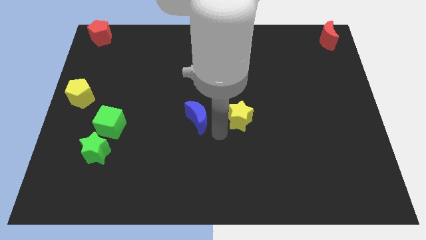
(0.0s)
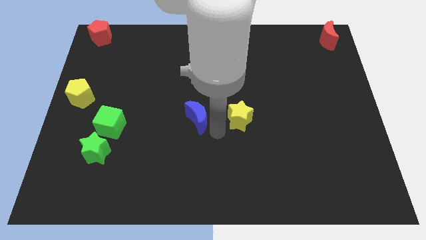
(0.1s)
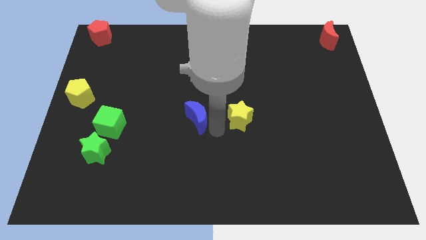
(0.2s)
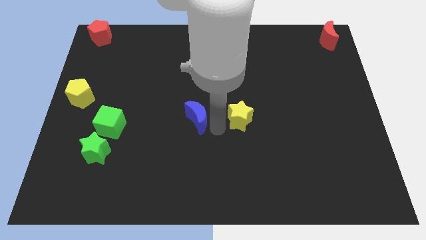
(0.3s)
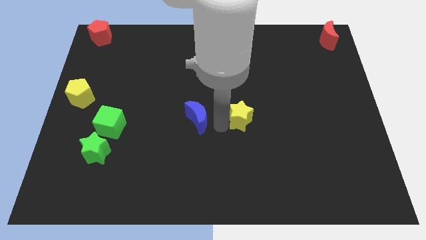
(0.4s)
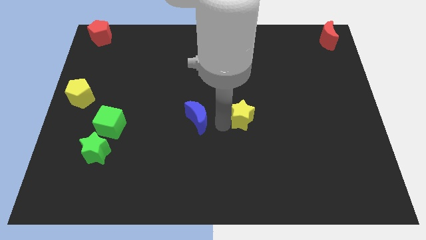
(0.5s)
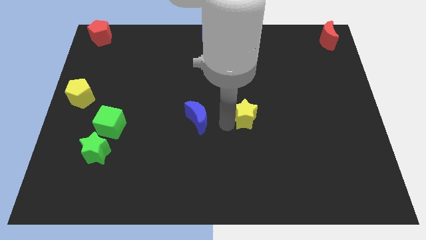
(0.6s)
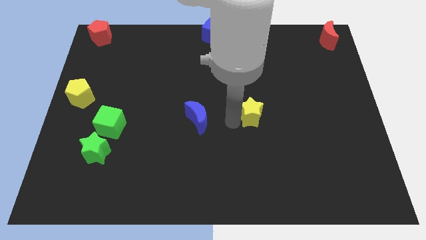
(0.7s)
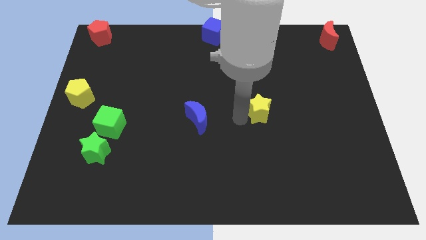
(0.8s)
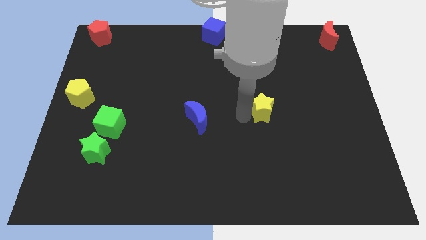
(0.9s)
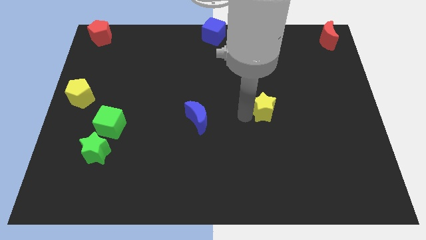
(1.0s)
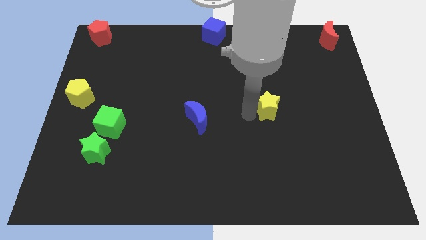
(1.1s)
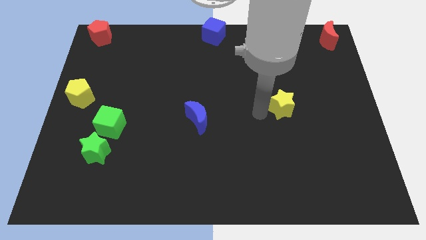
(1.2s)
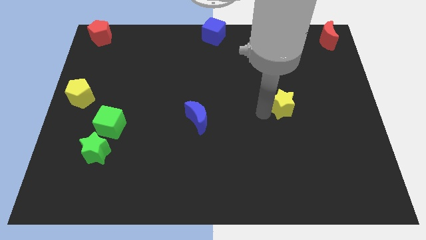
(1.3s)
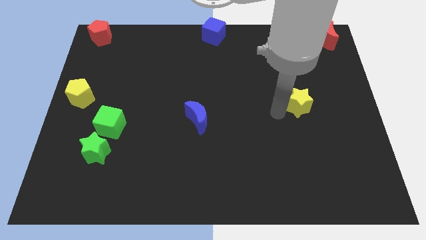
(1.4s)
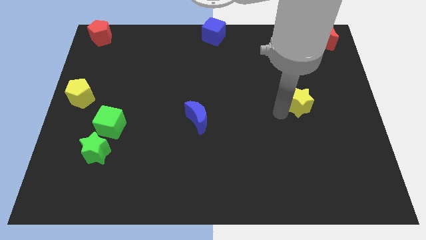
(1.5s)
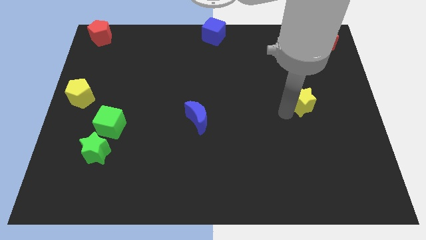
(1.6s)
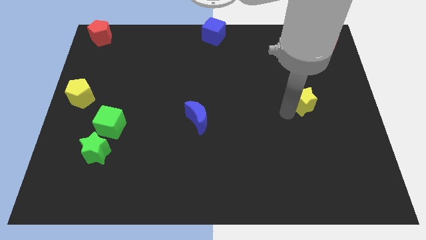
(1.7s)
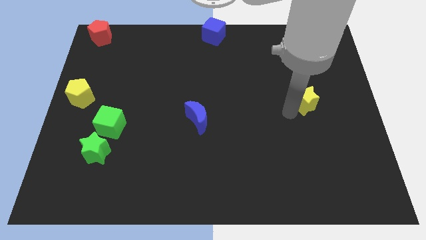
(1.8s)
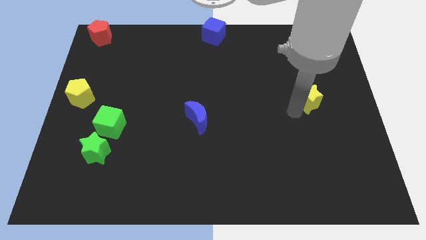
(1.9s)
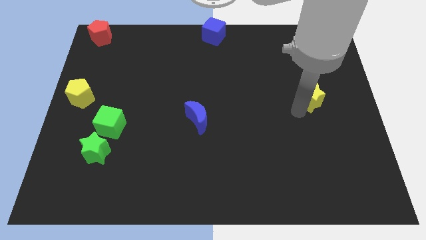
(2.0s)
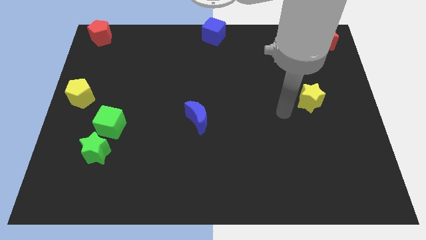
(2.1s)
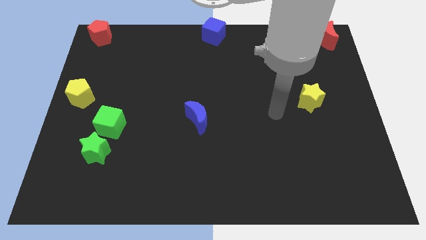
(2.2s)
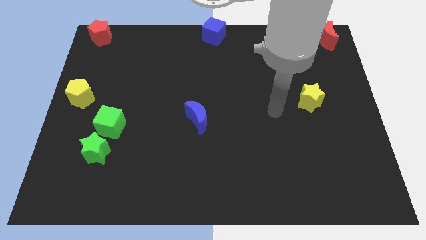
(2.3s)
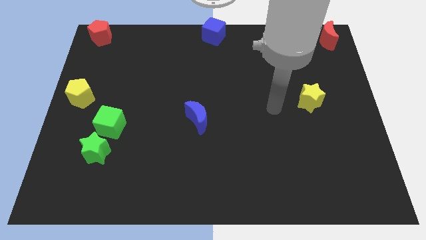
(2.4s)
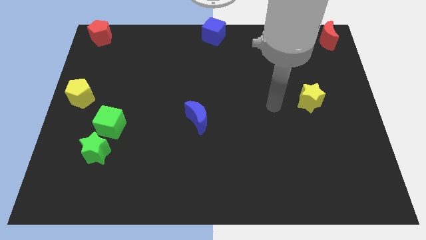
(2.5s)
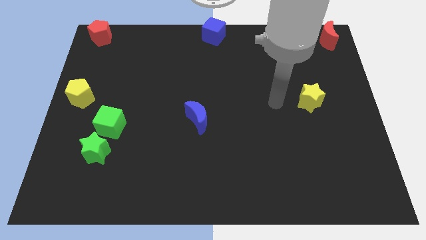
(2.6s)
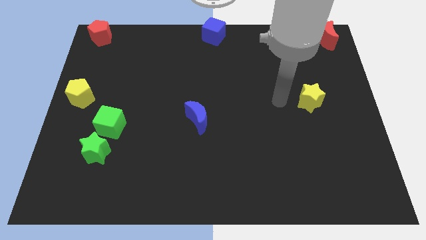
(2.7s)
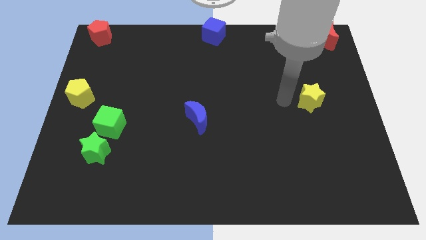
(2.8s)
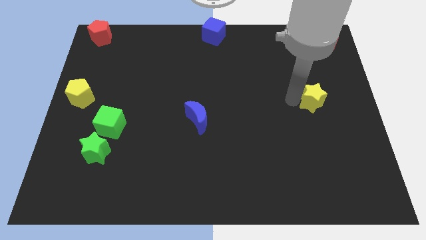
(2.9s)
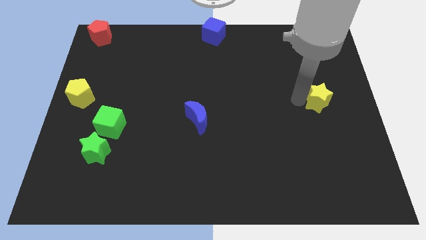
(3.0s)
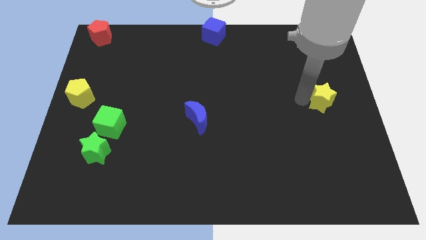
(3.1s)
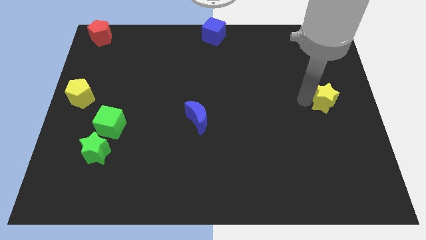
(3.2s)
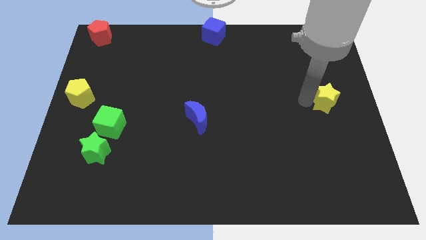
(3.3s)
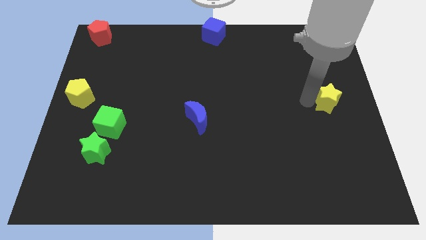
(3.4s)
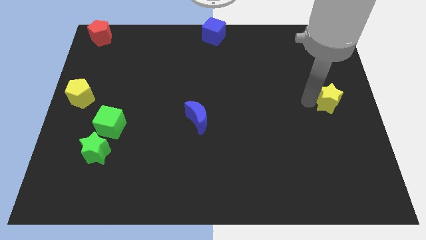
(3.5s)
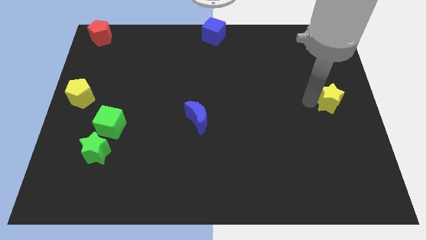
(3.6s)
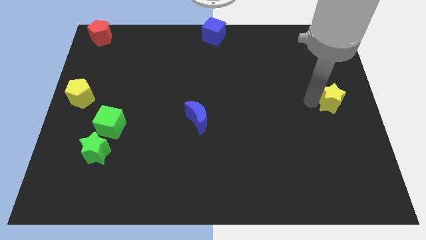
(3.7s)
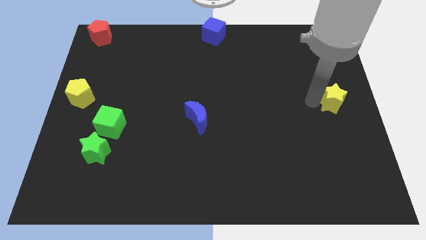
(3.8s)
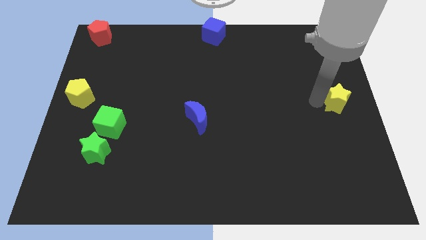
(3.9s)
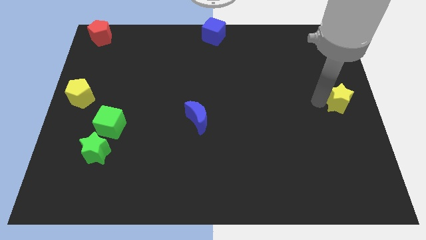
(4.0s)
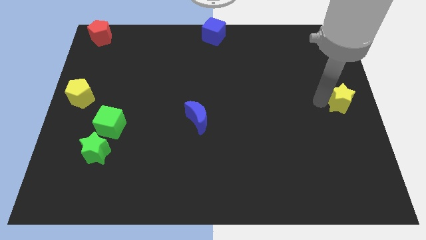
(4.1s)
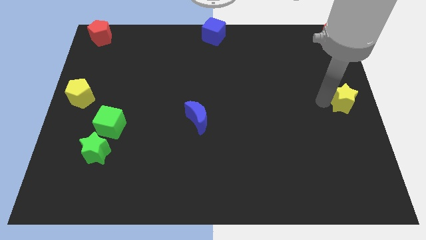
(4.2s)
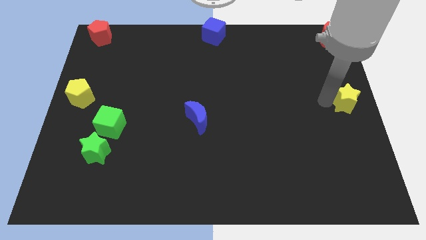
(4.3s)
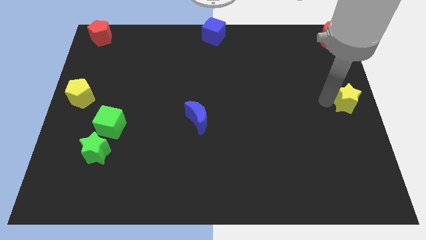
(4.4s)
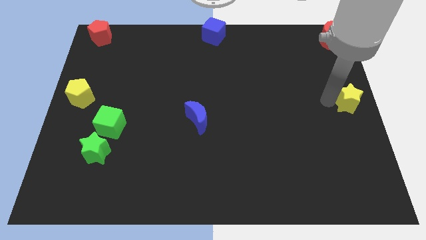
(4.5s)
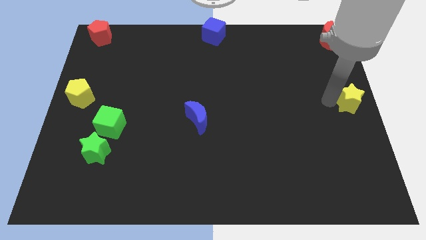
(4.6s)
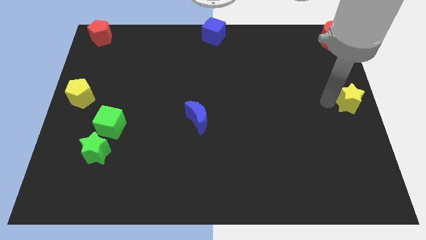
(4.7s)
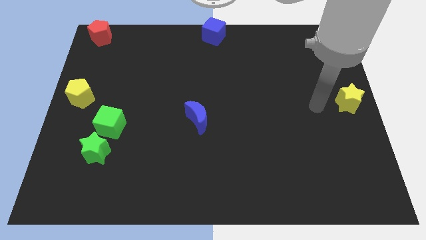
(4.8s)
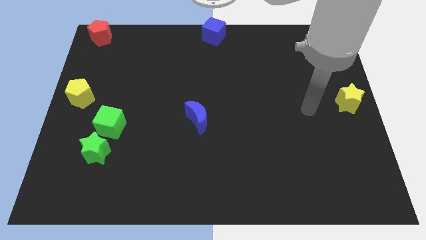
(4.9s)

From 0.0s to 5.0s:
slide the yellow star to the center right of the board

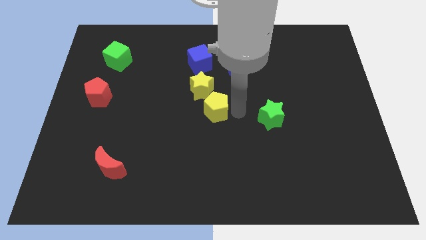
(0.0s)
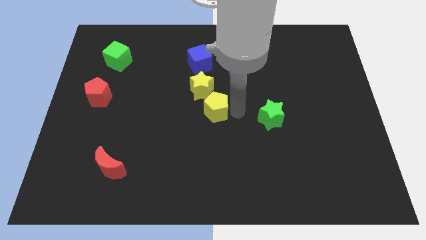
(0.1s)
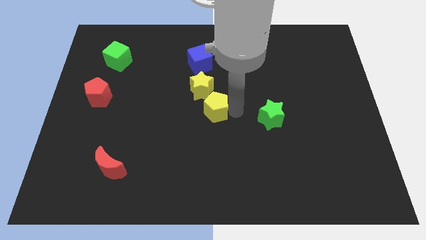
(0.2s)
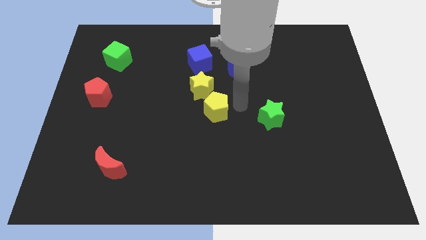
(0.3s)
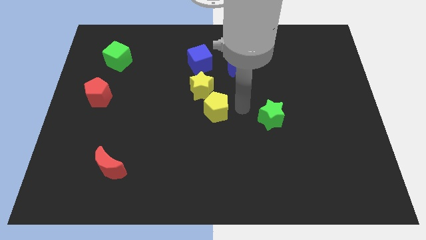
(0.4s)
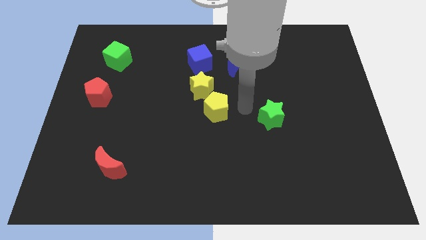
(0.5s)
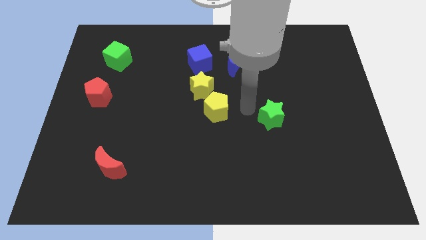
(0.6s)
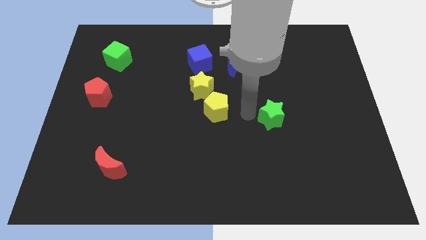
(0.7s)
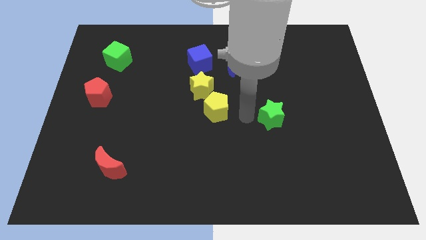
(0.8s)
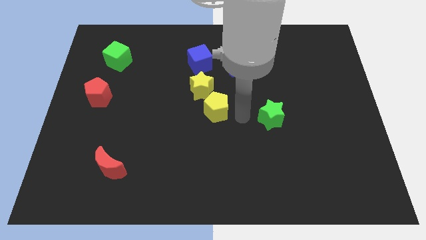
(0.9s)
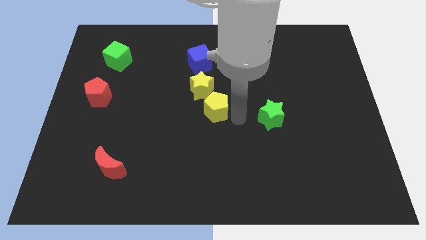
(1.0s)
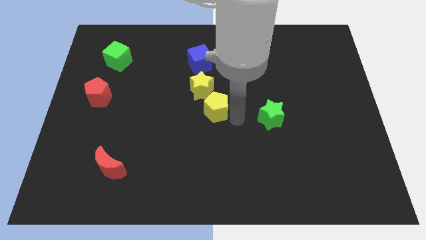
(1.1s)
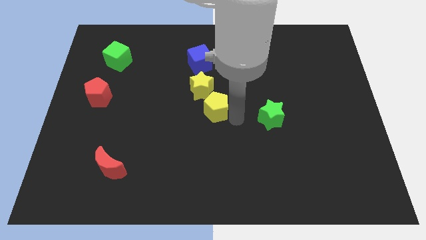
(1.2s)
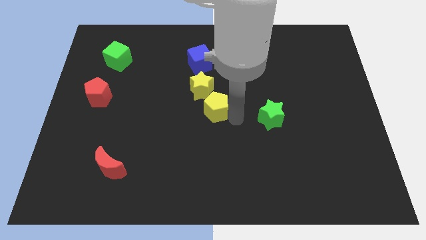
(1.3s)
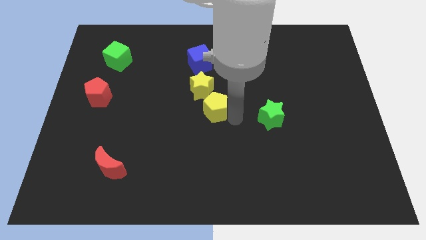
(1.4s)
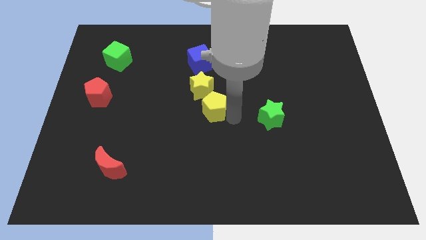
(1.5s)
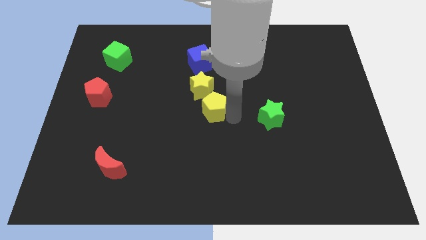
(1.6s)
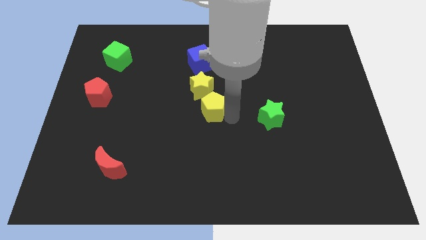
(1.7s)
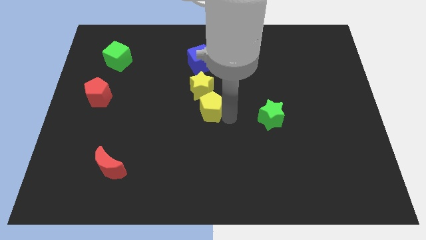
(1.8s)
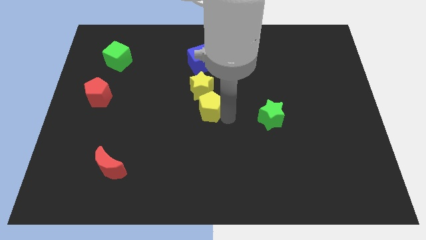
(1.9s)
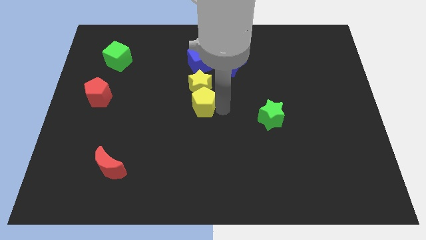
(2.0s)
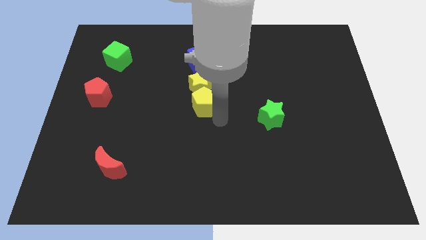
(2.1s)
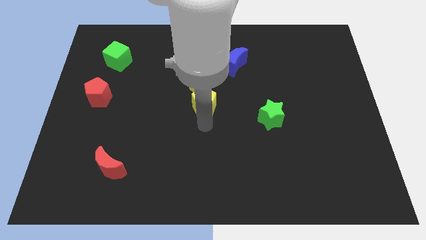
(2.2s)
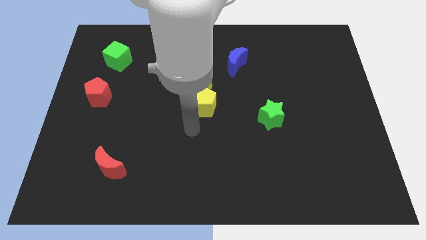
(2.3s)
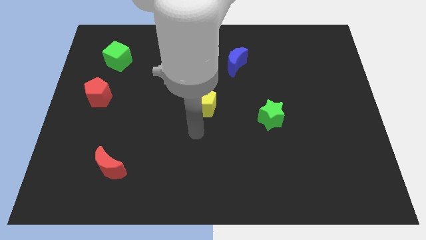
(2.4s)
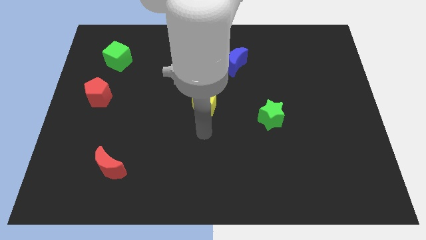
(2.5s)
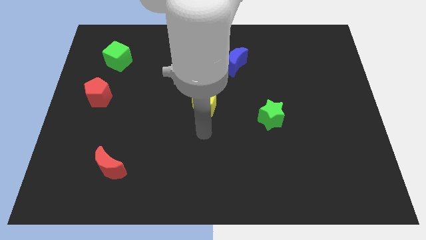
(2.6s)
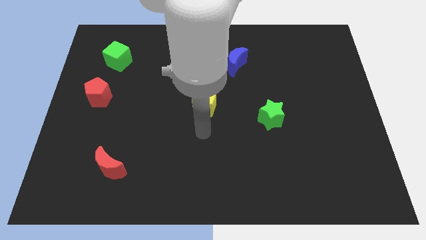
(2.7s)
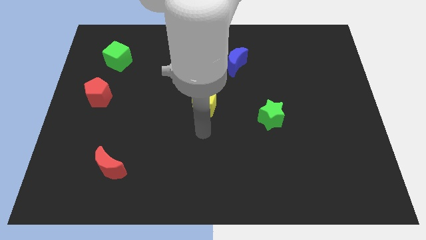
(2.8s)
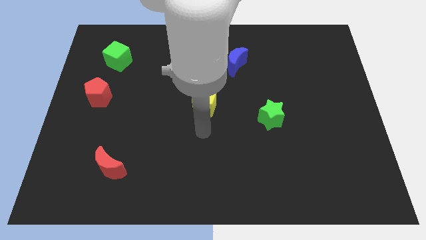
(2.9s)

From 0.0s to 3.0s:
push the yellow pentagon slightly upwards

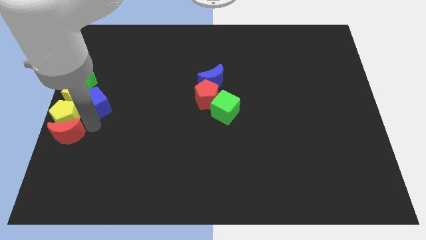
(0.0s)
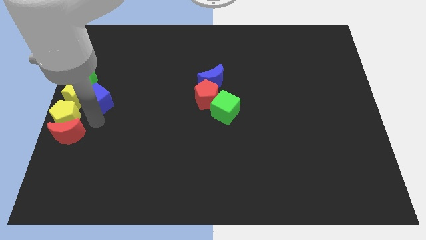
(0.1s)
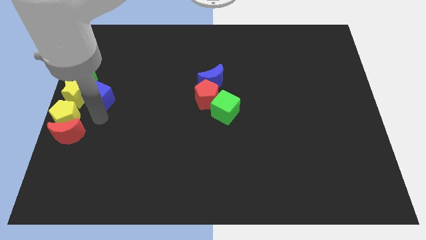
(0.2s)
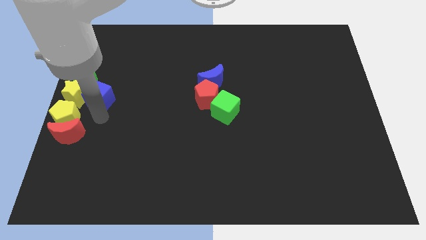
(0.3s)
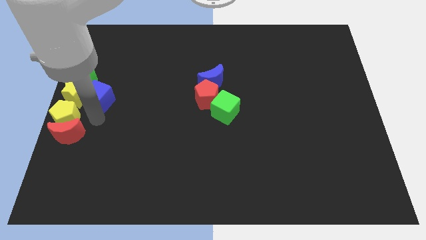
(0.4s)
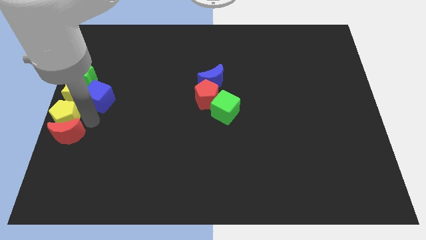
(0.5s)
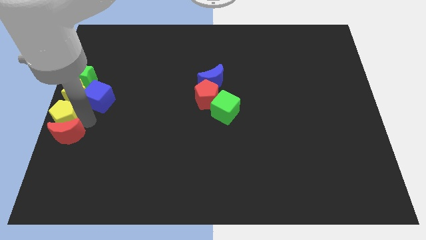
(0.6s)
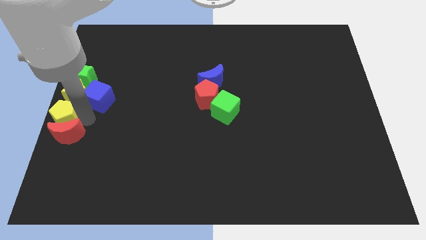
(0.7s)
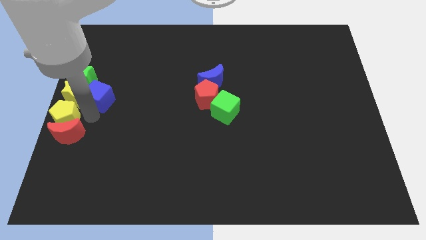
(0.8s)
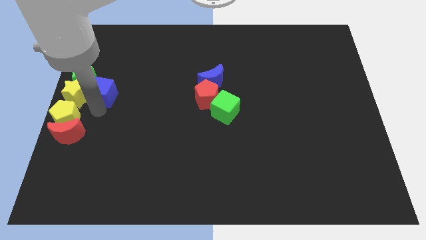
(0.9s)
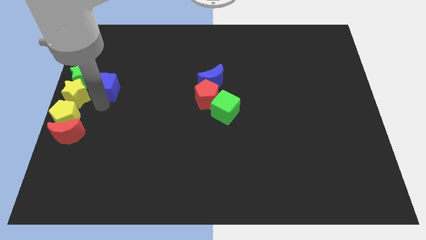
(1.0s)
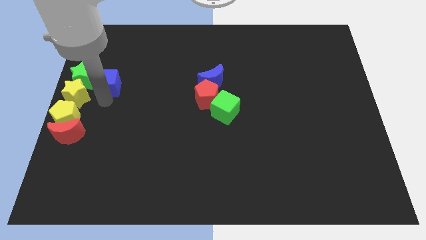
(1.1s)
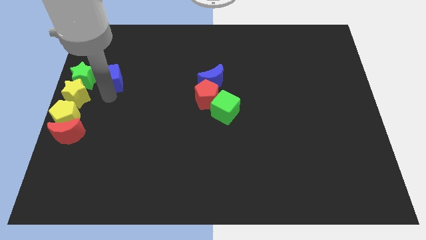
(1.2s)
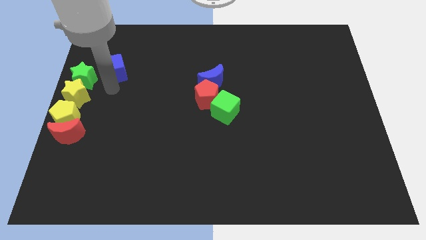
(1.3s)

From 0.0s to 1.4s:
put the blue cube at the right of the green star
